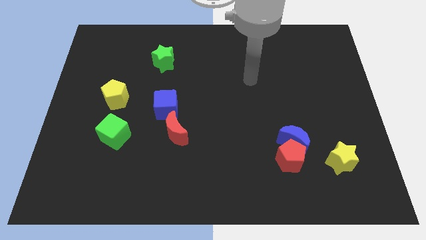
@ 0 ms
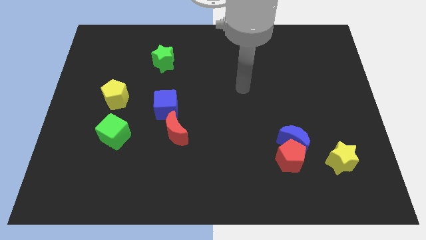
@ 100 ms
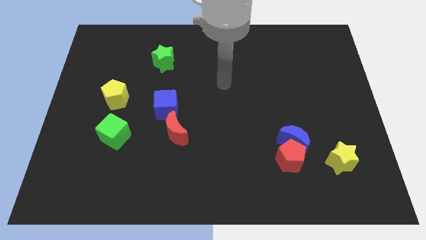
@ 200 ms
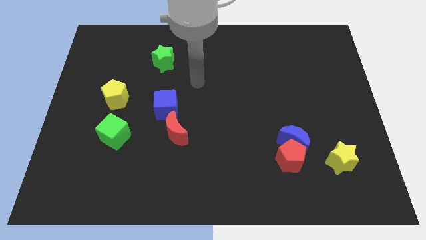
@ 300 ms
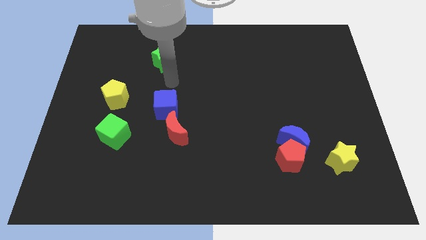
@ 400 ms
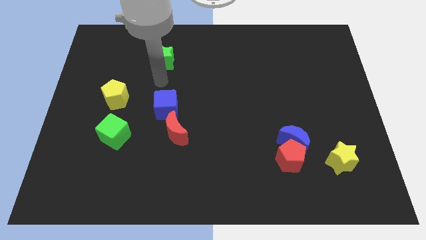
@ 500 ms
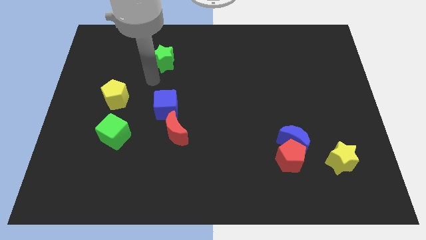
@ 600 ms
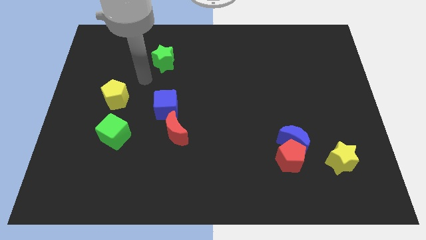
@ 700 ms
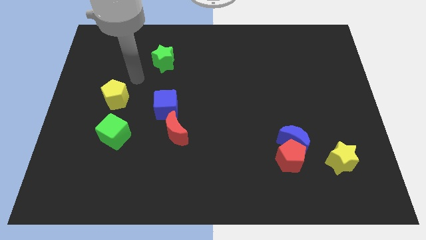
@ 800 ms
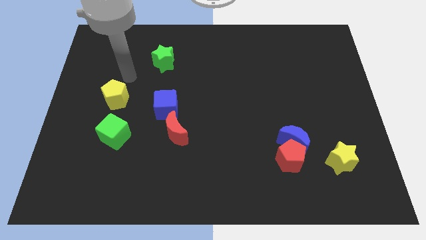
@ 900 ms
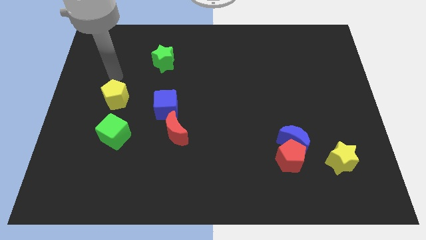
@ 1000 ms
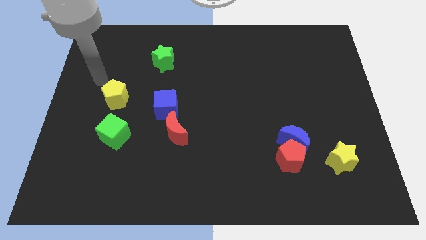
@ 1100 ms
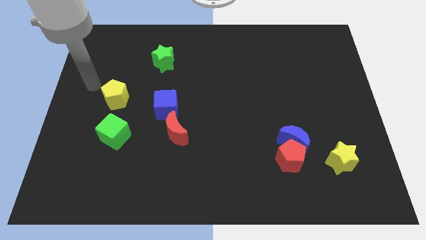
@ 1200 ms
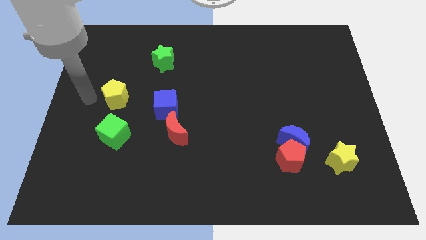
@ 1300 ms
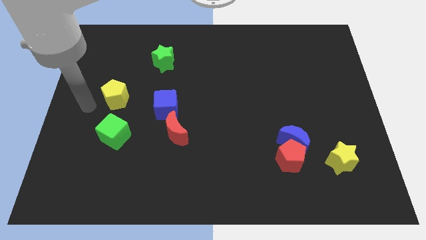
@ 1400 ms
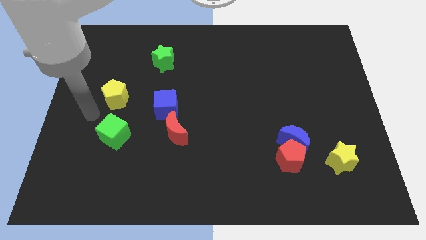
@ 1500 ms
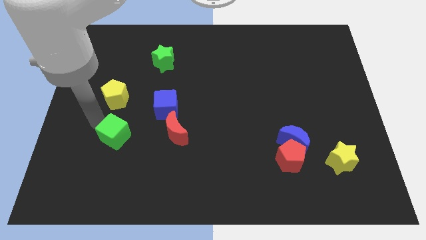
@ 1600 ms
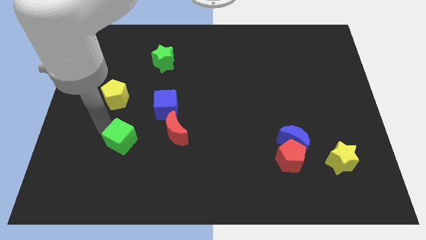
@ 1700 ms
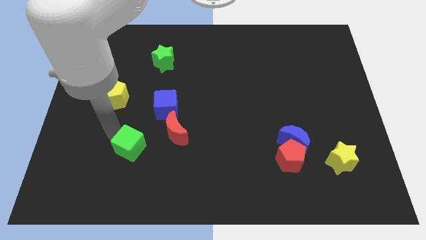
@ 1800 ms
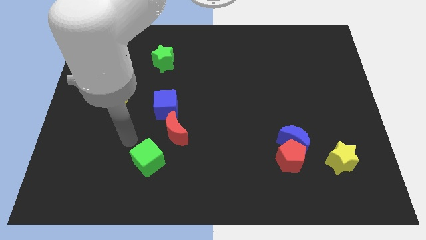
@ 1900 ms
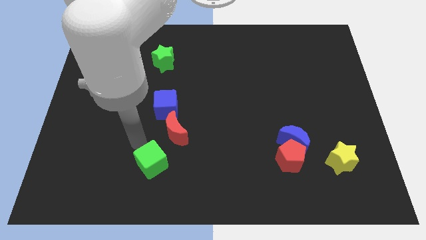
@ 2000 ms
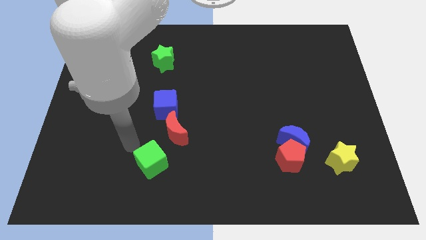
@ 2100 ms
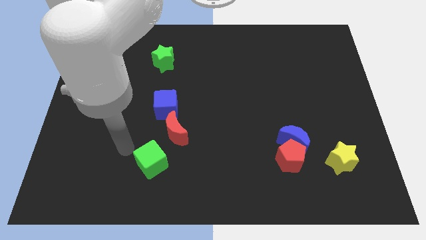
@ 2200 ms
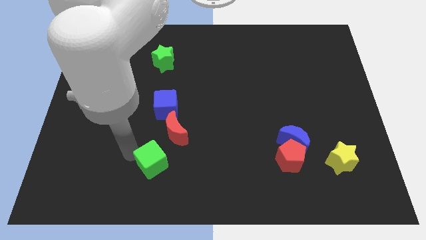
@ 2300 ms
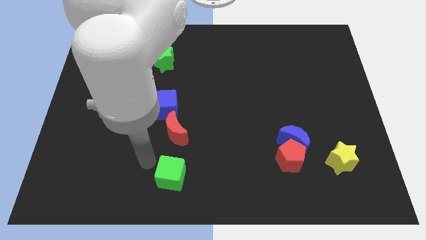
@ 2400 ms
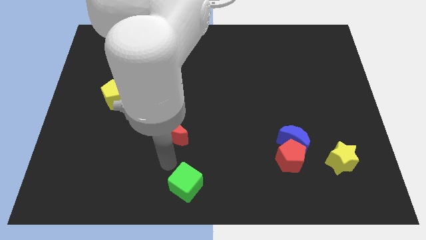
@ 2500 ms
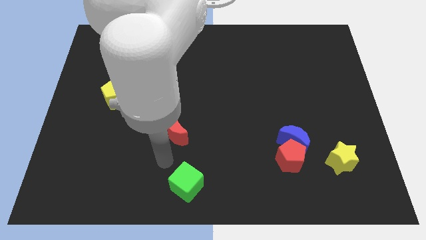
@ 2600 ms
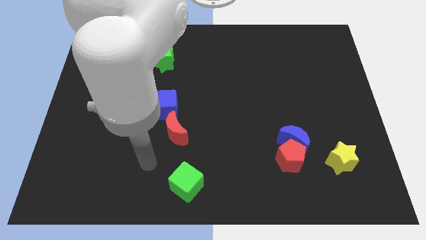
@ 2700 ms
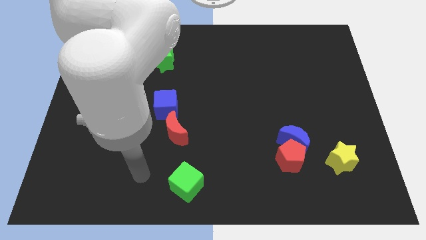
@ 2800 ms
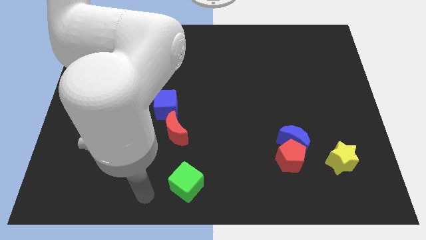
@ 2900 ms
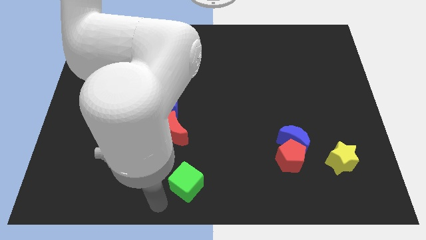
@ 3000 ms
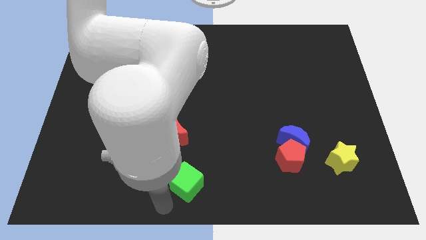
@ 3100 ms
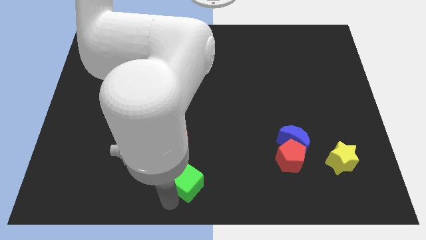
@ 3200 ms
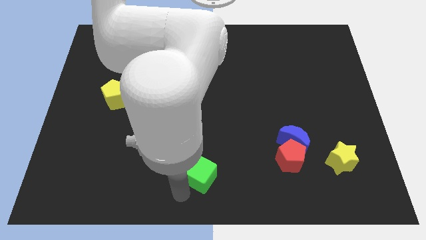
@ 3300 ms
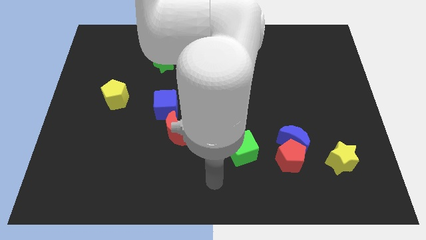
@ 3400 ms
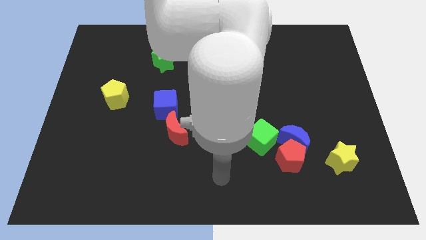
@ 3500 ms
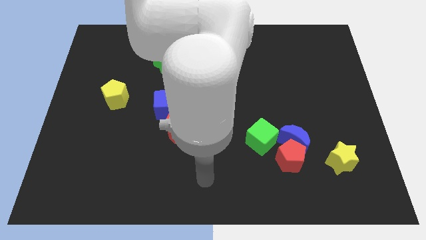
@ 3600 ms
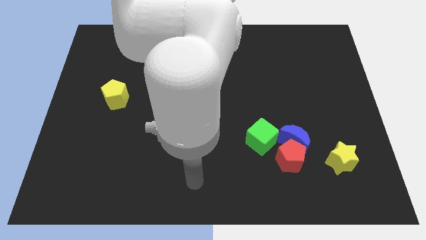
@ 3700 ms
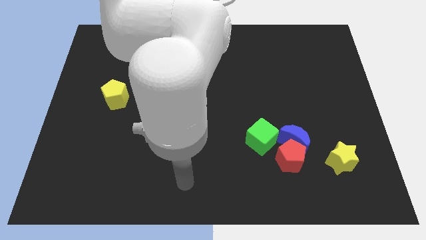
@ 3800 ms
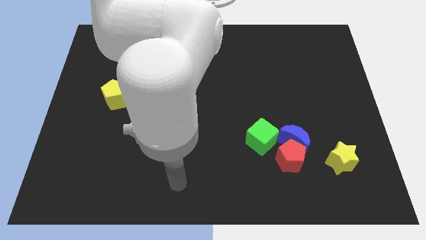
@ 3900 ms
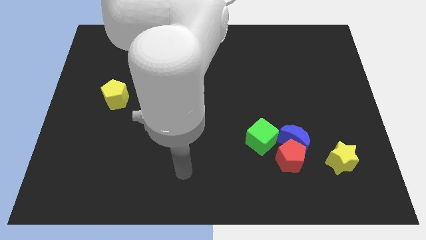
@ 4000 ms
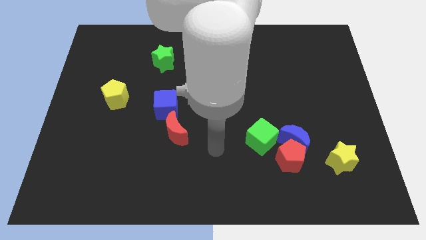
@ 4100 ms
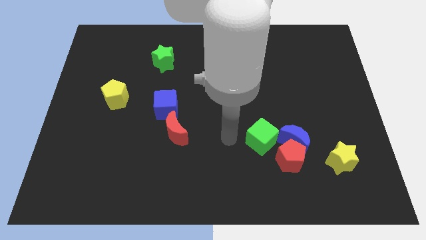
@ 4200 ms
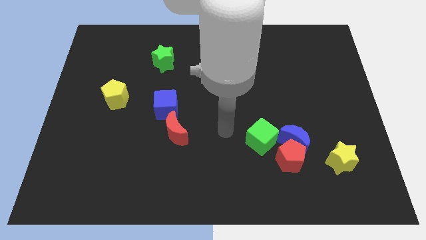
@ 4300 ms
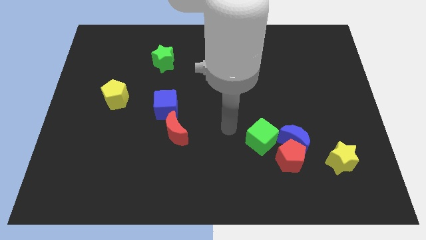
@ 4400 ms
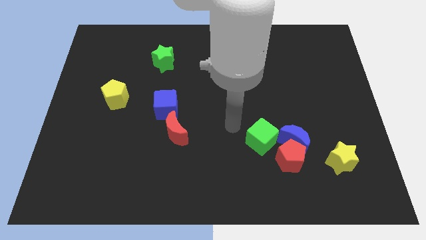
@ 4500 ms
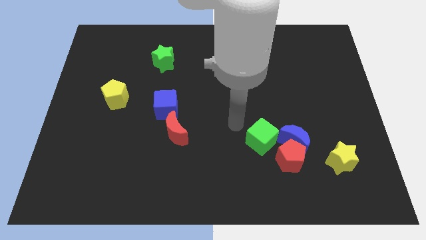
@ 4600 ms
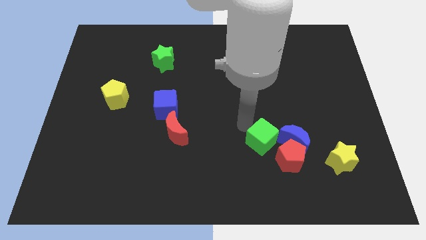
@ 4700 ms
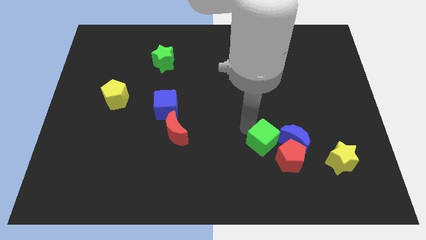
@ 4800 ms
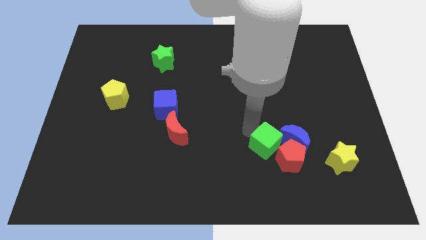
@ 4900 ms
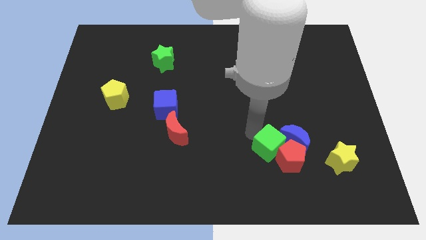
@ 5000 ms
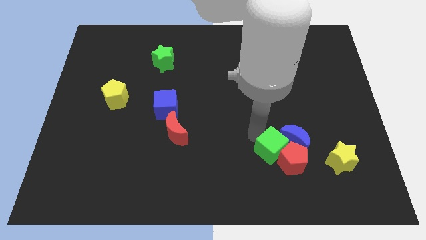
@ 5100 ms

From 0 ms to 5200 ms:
move the green cube towards the red pentagon

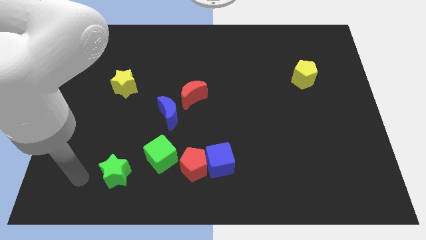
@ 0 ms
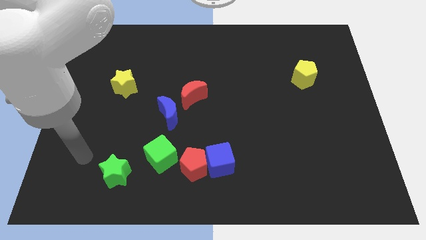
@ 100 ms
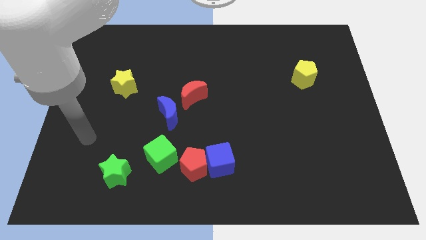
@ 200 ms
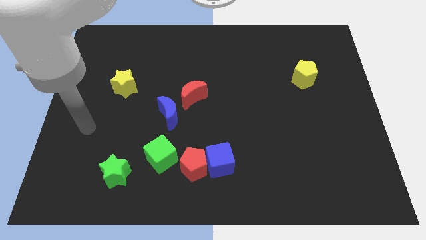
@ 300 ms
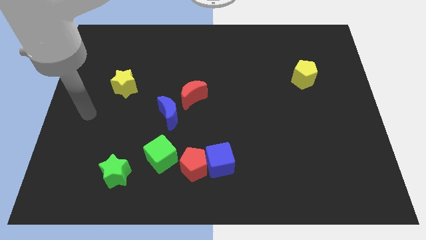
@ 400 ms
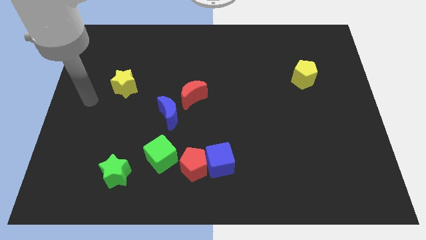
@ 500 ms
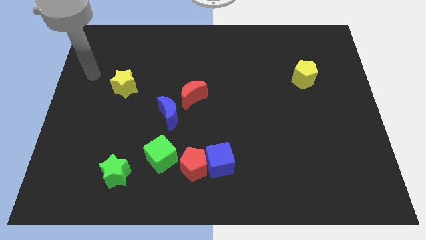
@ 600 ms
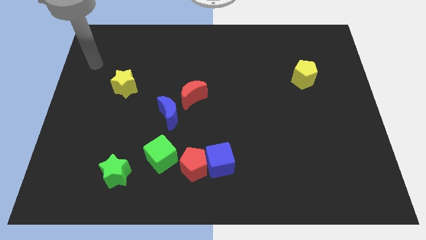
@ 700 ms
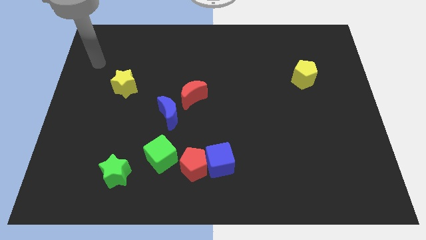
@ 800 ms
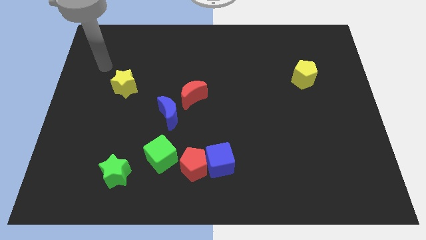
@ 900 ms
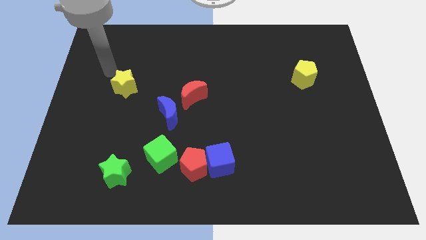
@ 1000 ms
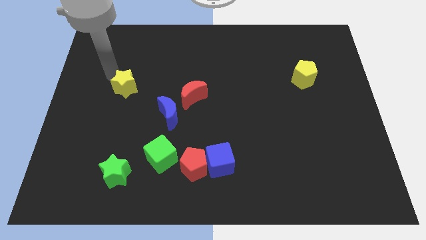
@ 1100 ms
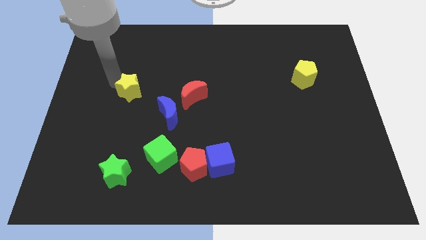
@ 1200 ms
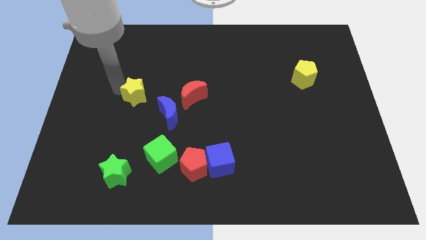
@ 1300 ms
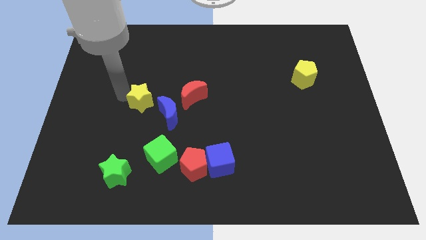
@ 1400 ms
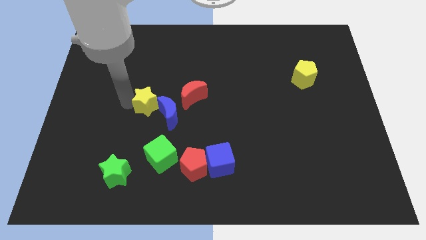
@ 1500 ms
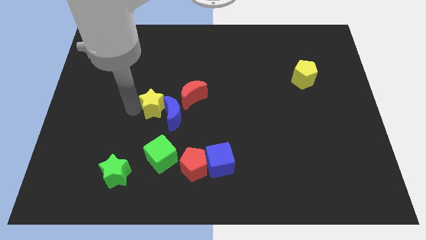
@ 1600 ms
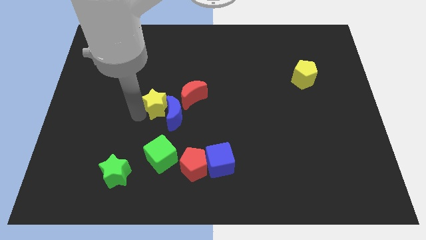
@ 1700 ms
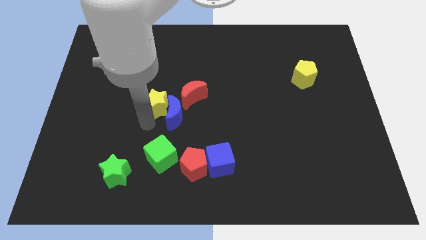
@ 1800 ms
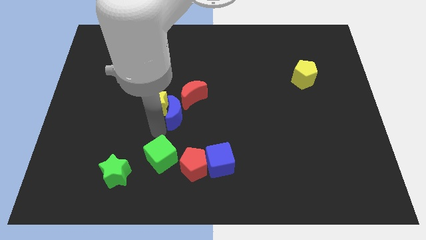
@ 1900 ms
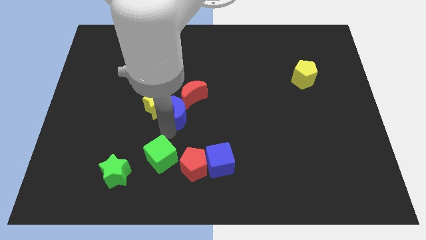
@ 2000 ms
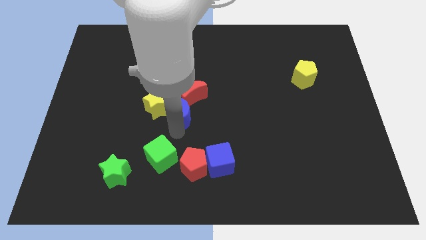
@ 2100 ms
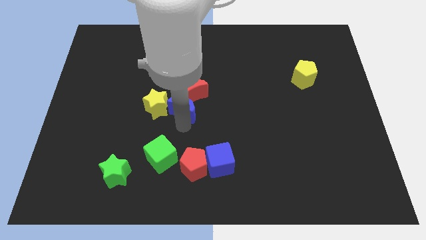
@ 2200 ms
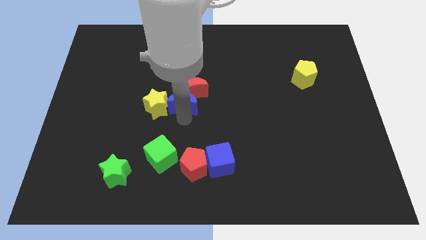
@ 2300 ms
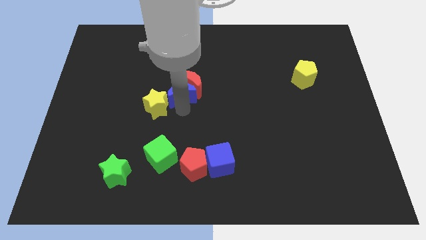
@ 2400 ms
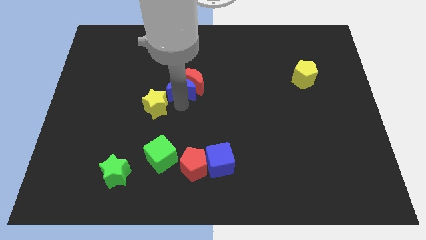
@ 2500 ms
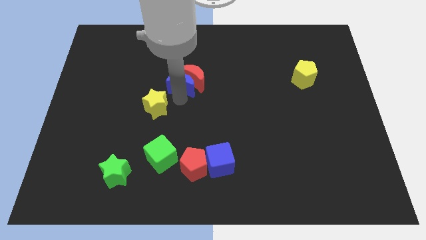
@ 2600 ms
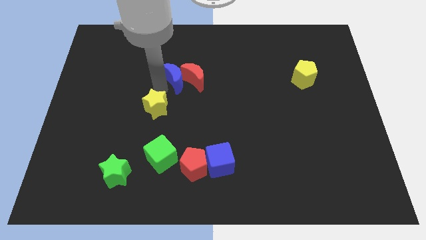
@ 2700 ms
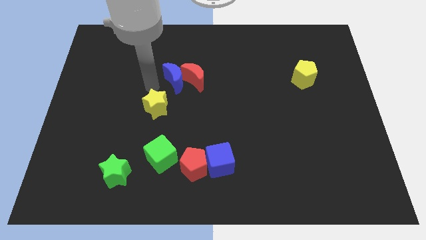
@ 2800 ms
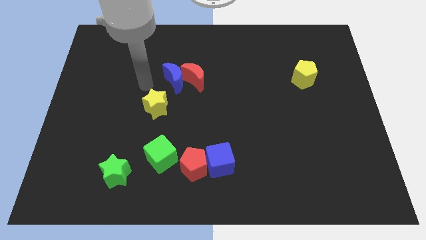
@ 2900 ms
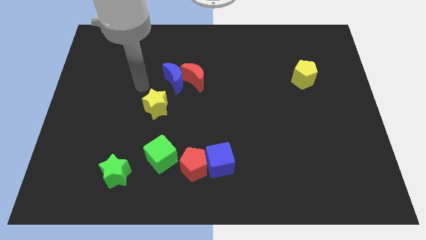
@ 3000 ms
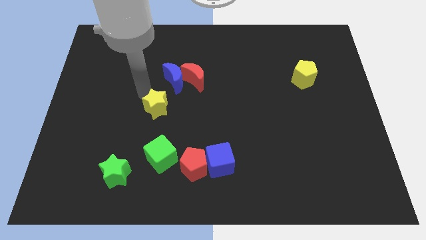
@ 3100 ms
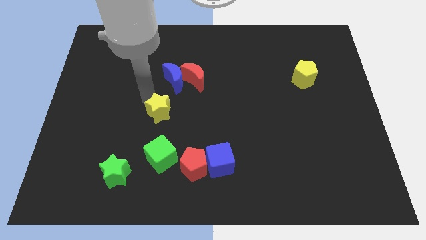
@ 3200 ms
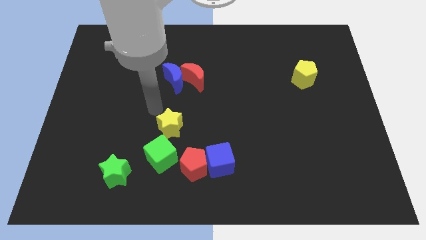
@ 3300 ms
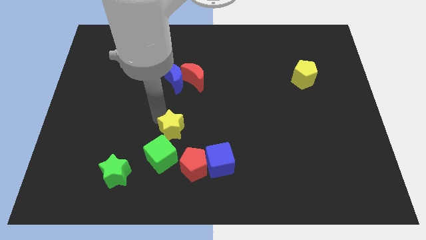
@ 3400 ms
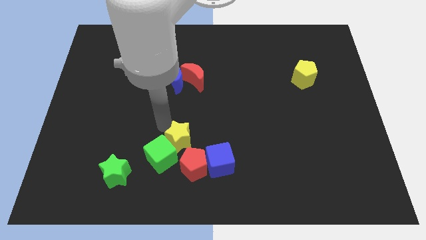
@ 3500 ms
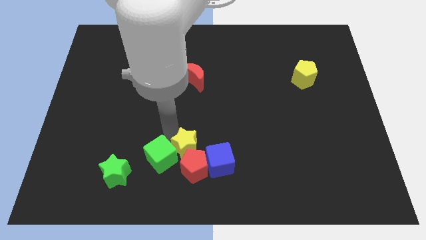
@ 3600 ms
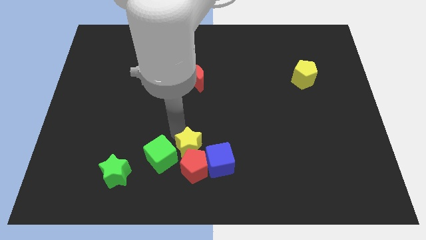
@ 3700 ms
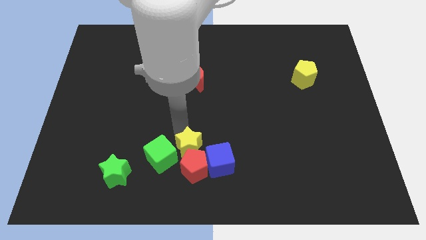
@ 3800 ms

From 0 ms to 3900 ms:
slide the yellow star to the red pentagon
